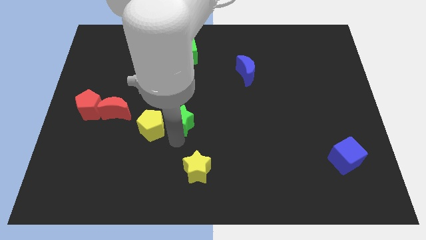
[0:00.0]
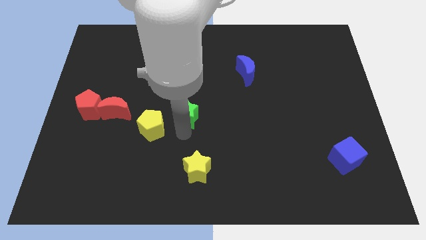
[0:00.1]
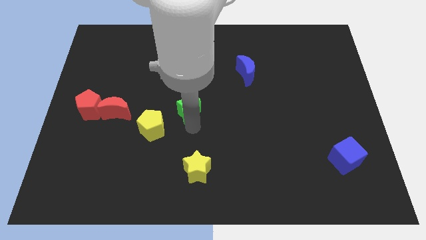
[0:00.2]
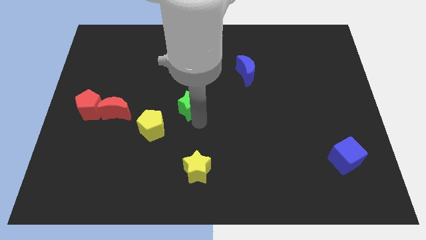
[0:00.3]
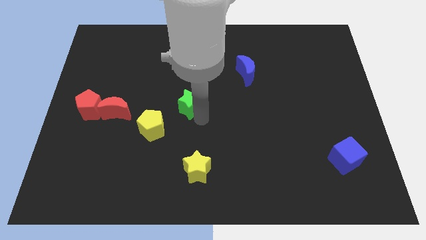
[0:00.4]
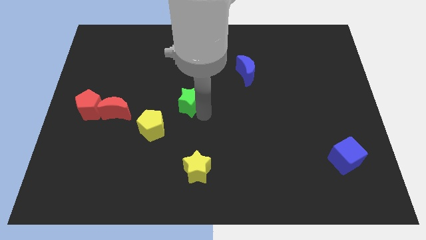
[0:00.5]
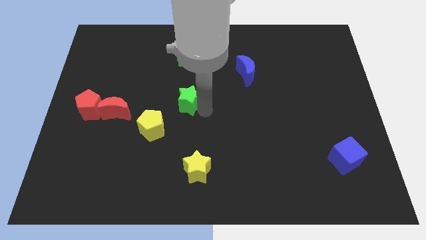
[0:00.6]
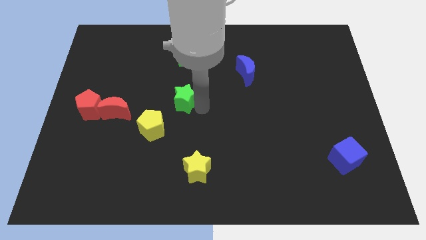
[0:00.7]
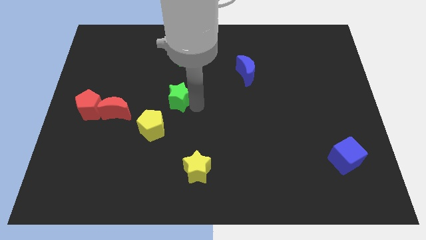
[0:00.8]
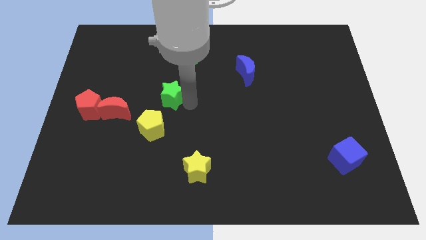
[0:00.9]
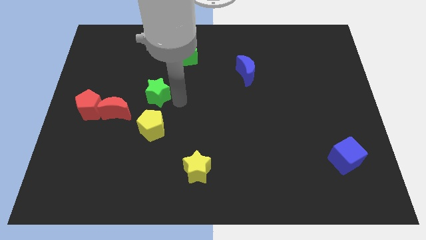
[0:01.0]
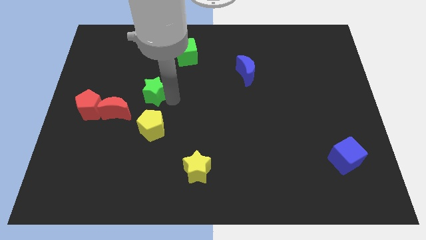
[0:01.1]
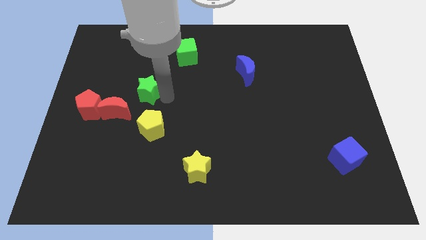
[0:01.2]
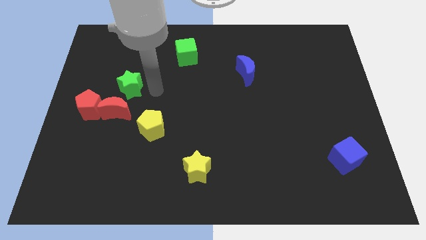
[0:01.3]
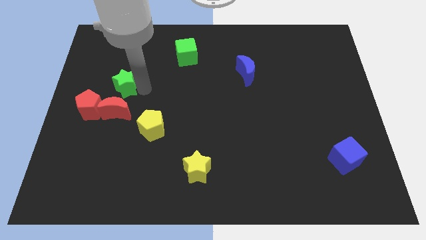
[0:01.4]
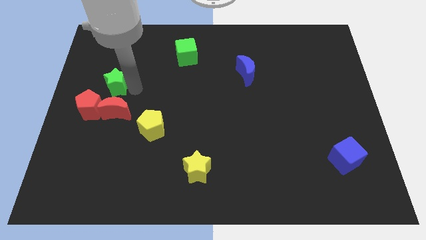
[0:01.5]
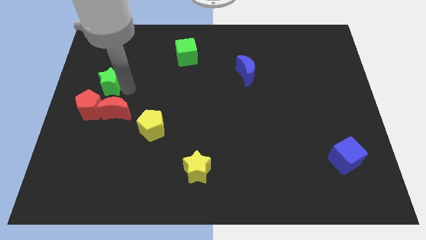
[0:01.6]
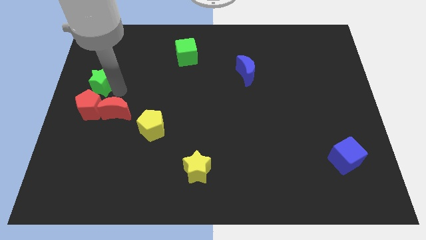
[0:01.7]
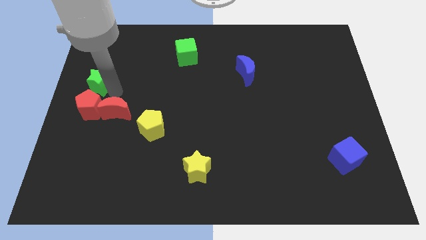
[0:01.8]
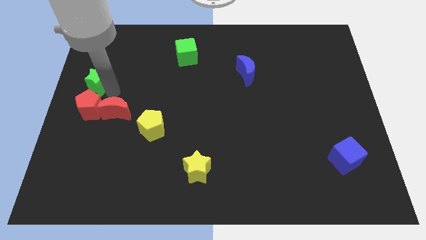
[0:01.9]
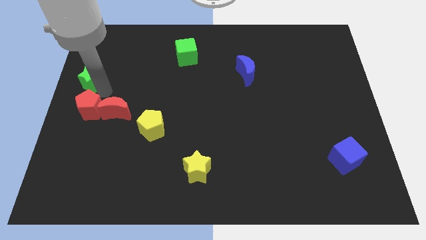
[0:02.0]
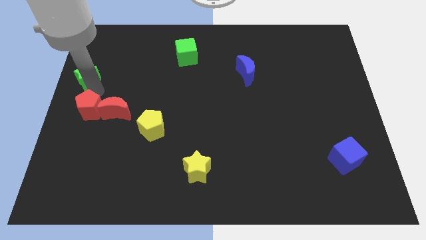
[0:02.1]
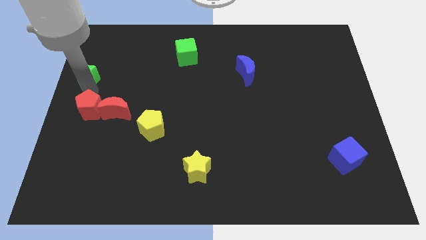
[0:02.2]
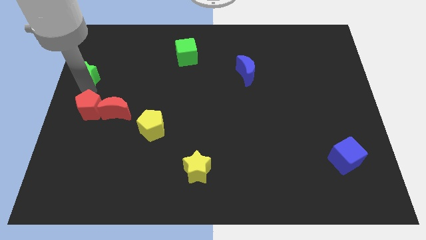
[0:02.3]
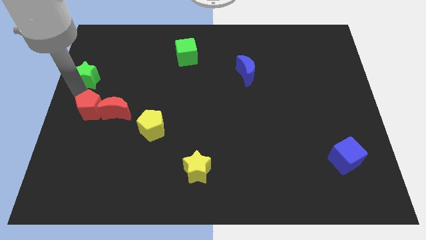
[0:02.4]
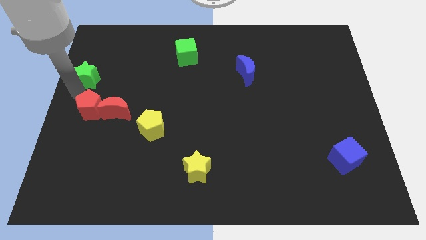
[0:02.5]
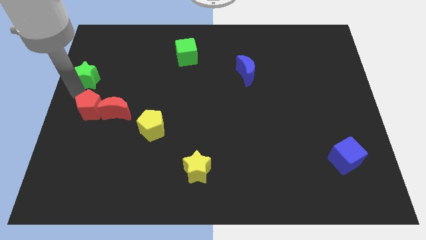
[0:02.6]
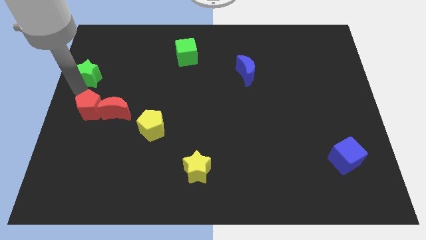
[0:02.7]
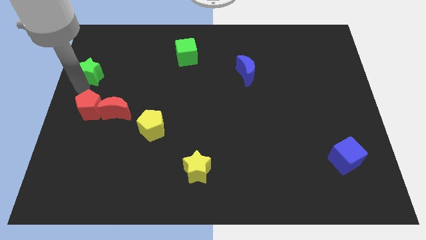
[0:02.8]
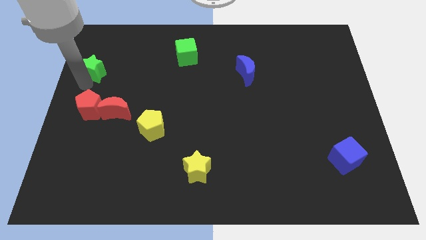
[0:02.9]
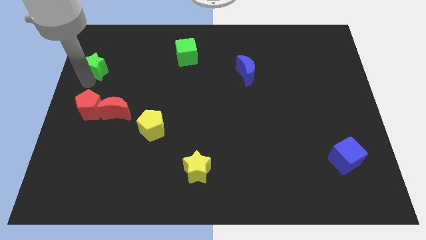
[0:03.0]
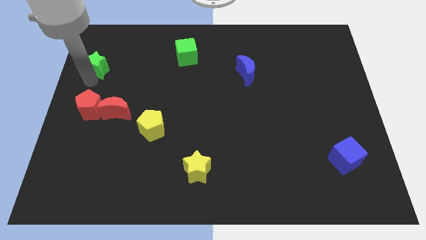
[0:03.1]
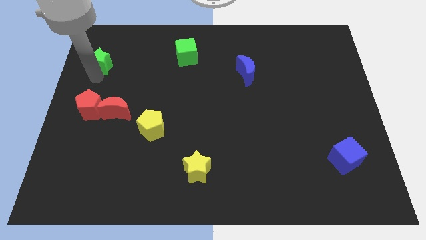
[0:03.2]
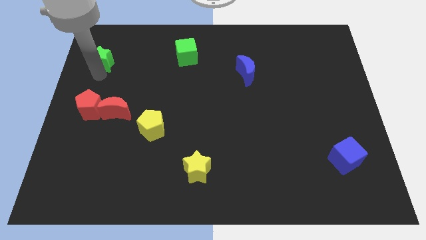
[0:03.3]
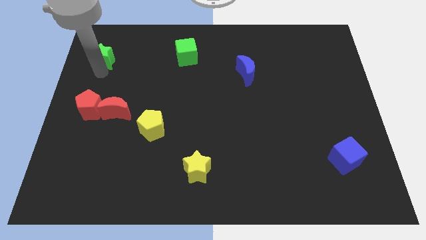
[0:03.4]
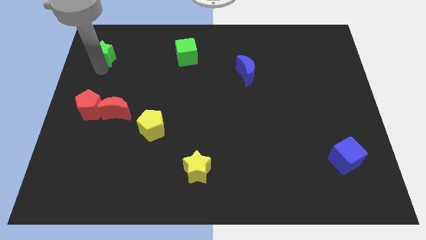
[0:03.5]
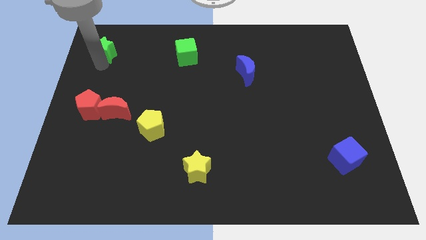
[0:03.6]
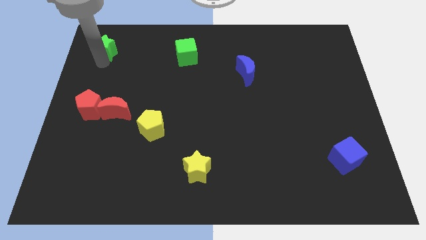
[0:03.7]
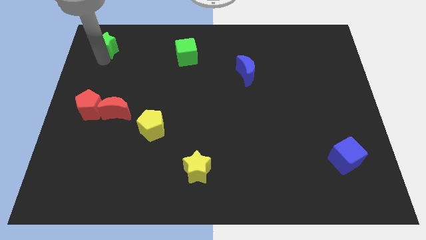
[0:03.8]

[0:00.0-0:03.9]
place the green star left to the green cube

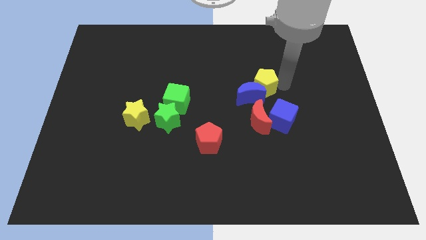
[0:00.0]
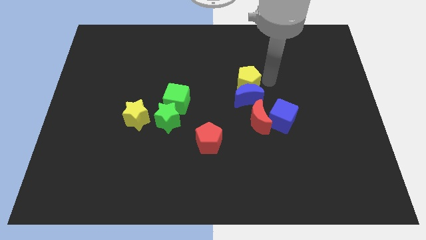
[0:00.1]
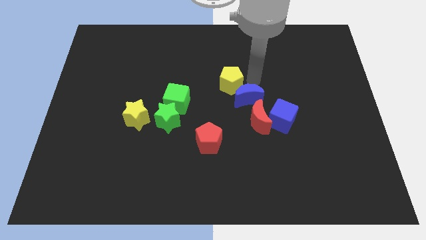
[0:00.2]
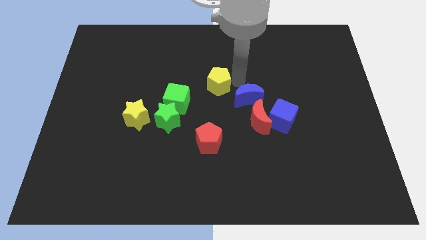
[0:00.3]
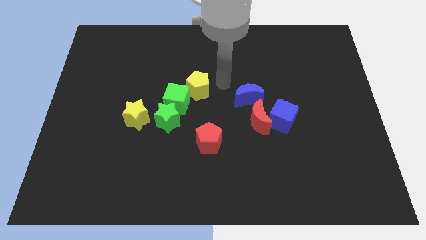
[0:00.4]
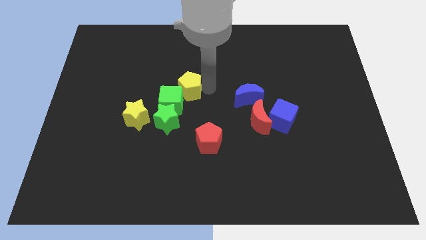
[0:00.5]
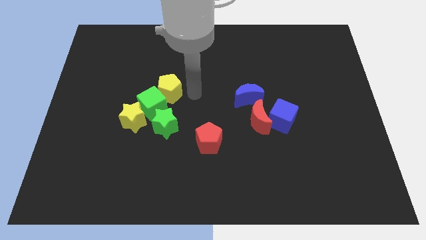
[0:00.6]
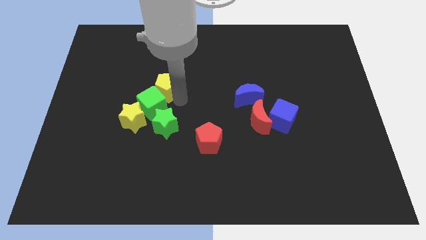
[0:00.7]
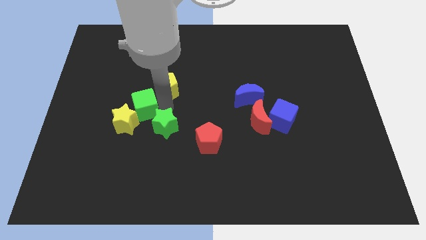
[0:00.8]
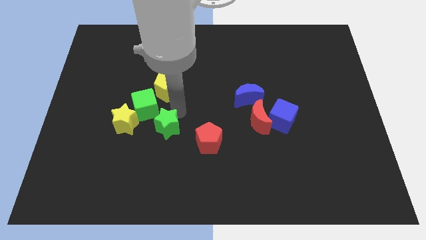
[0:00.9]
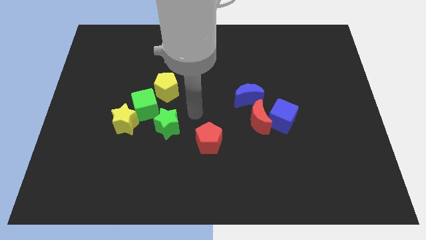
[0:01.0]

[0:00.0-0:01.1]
add yellow pentagon into green blocks

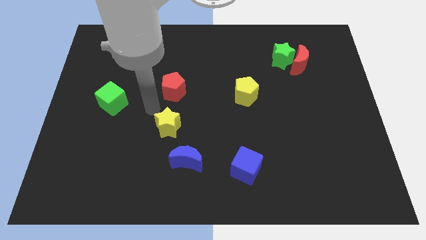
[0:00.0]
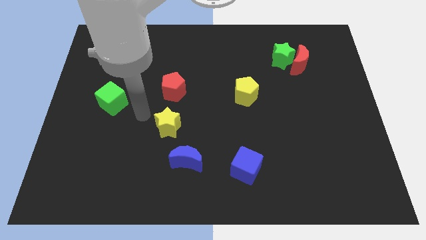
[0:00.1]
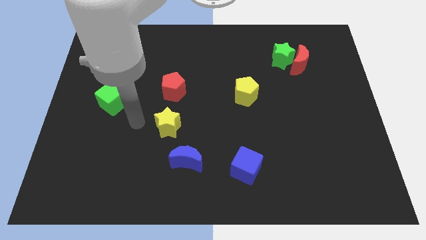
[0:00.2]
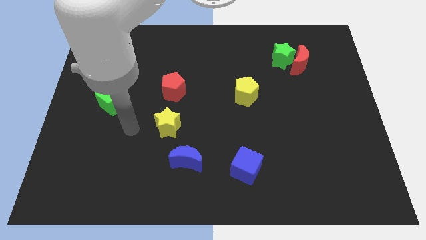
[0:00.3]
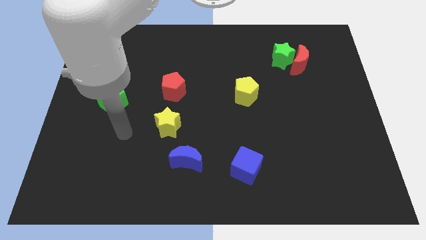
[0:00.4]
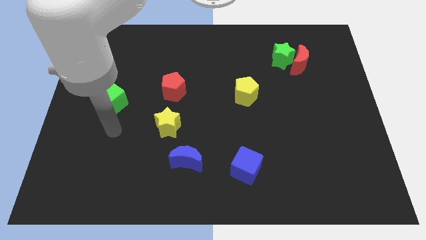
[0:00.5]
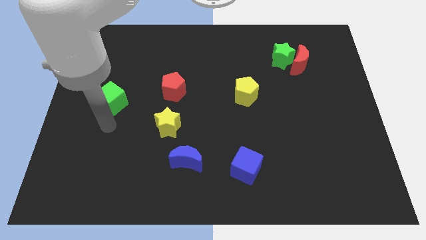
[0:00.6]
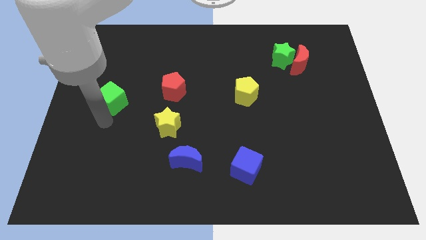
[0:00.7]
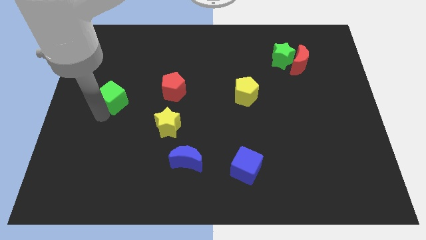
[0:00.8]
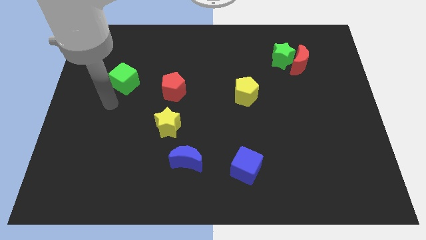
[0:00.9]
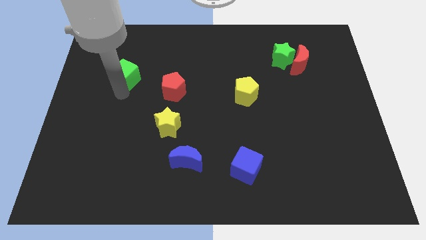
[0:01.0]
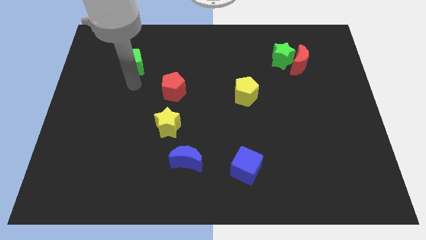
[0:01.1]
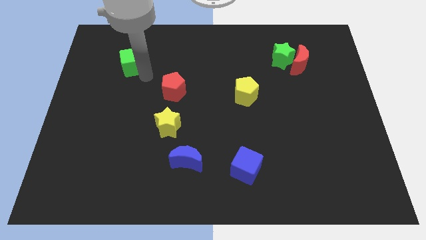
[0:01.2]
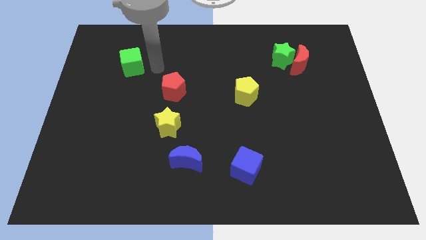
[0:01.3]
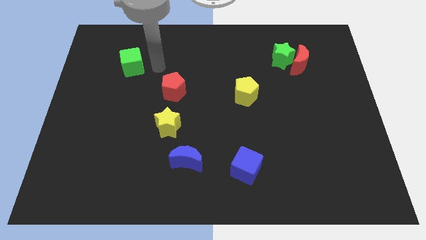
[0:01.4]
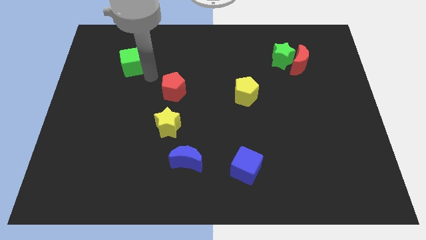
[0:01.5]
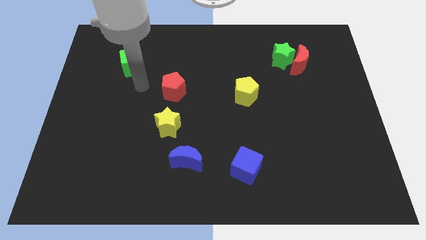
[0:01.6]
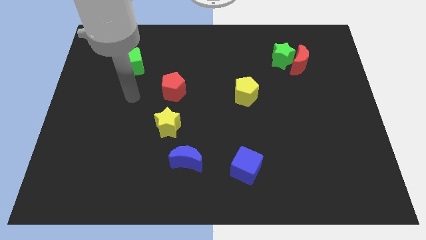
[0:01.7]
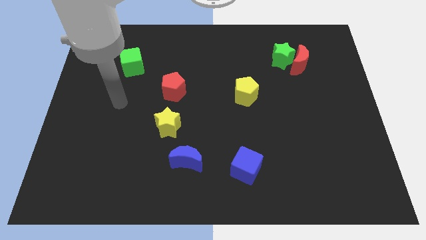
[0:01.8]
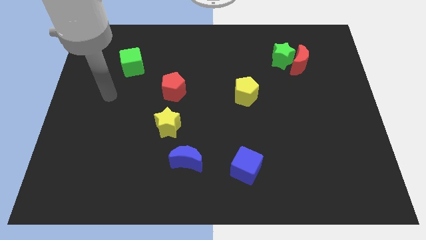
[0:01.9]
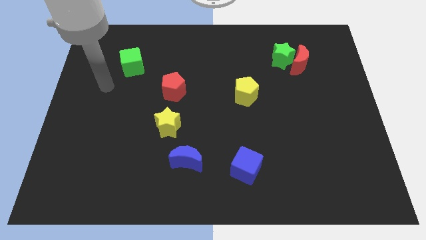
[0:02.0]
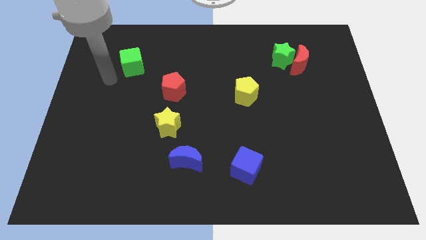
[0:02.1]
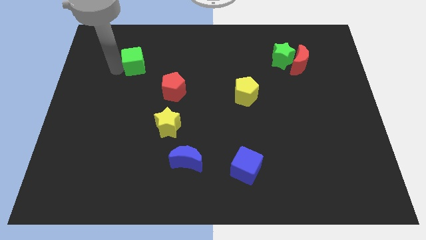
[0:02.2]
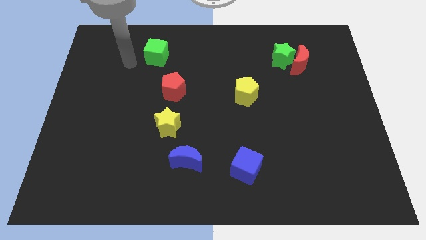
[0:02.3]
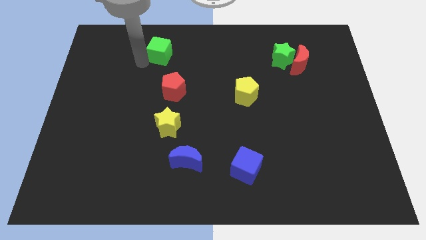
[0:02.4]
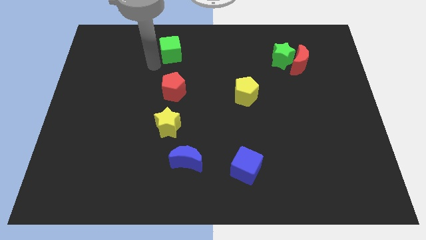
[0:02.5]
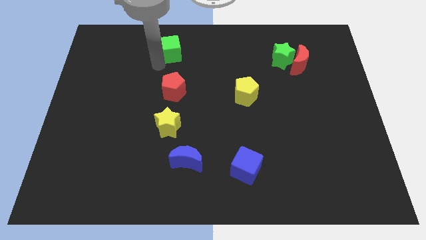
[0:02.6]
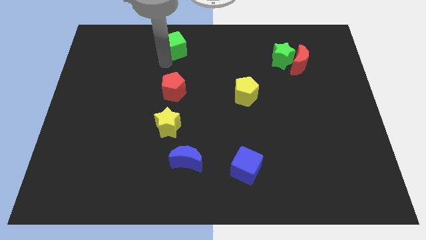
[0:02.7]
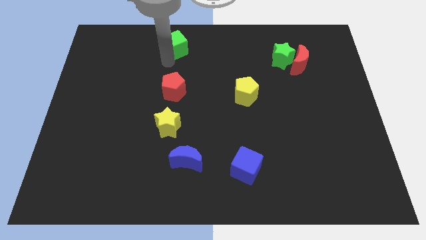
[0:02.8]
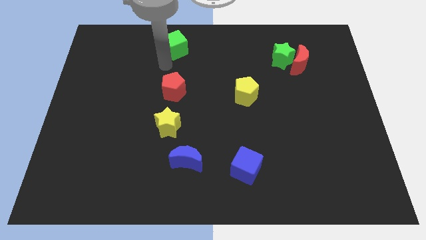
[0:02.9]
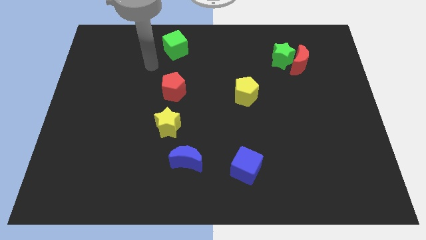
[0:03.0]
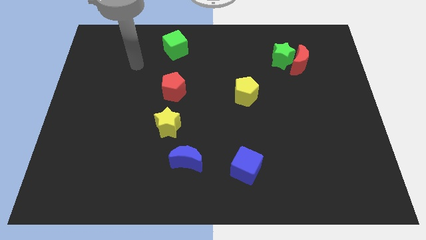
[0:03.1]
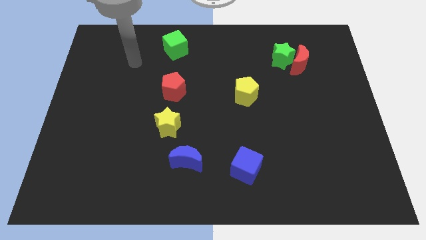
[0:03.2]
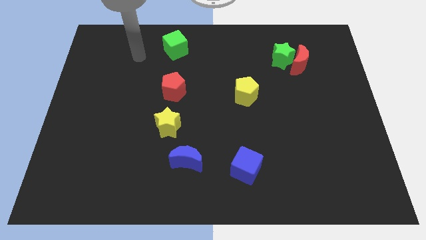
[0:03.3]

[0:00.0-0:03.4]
put the green cube vertically above the red pentagon

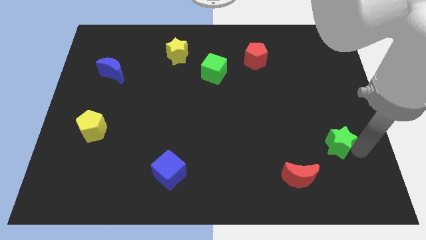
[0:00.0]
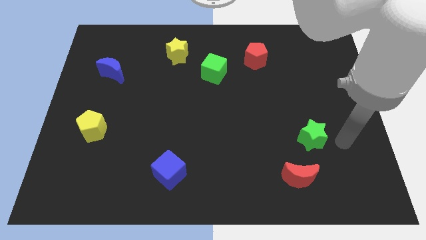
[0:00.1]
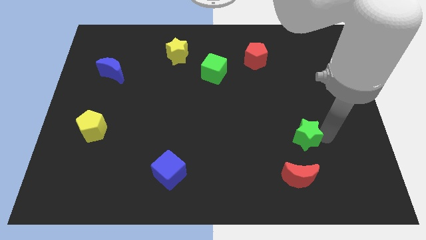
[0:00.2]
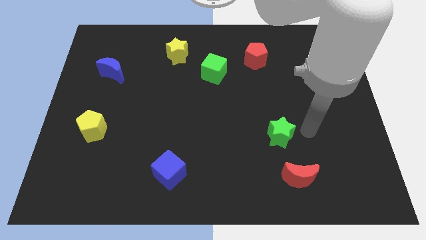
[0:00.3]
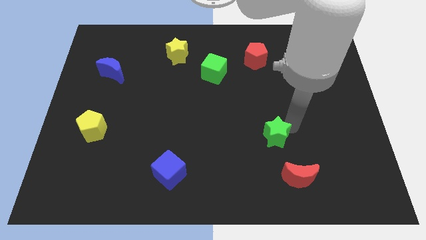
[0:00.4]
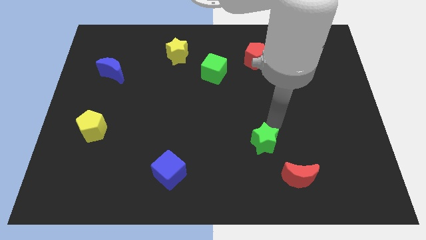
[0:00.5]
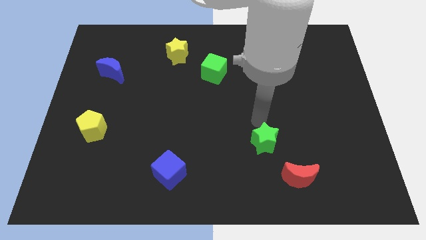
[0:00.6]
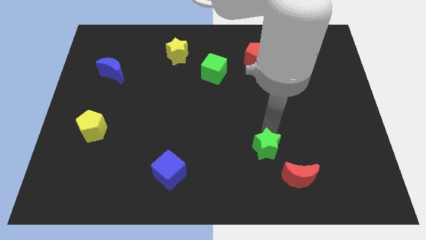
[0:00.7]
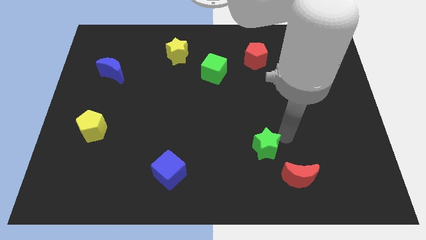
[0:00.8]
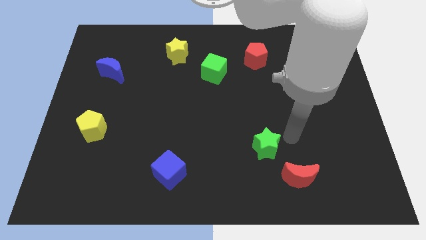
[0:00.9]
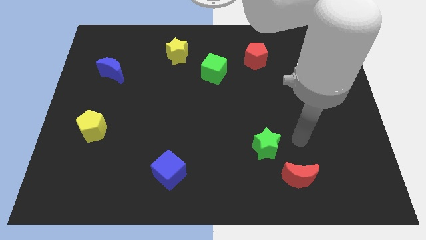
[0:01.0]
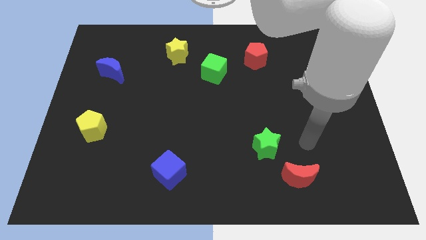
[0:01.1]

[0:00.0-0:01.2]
move green star to the top left of red crescent
